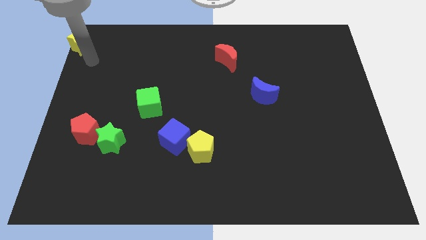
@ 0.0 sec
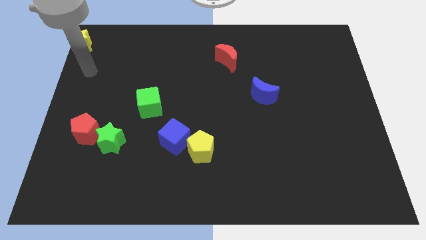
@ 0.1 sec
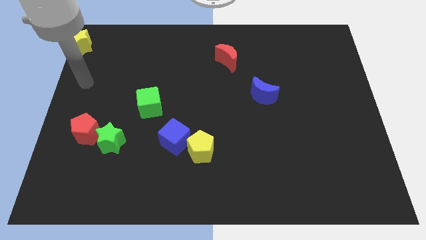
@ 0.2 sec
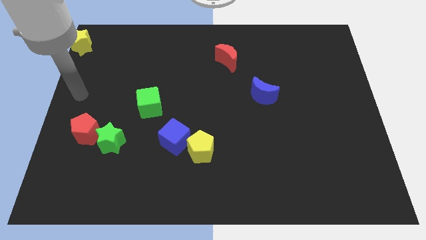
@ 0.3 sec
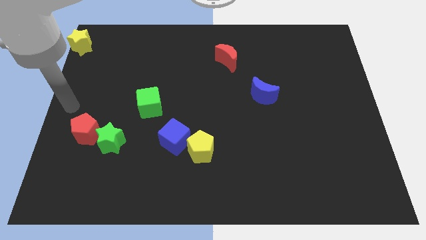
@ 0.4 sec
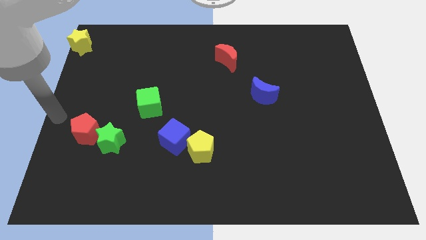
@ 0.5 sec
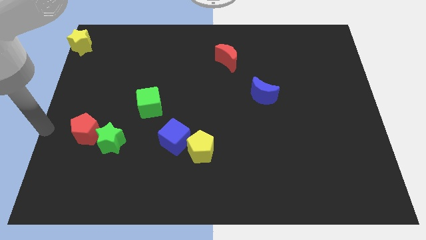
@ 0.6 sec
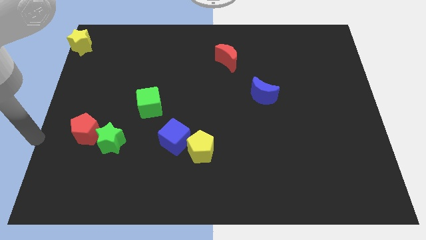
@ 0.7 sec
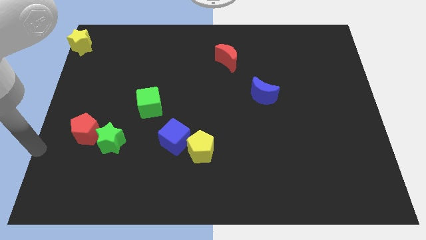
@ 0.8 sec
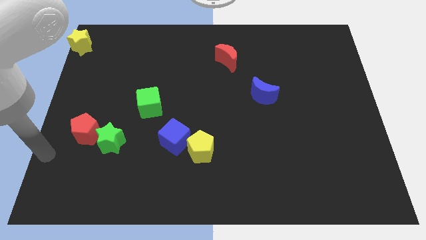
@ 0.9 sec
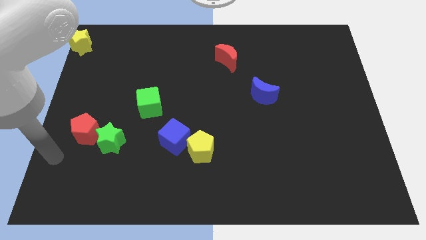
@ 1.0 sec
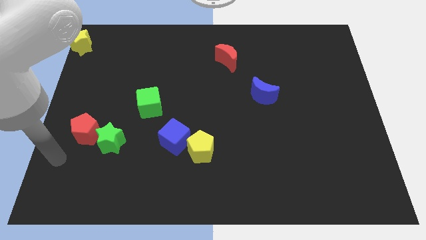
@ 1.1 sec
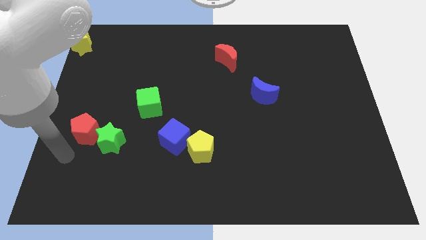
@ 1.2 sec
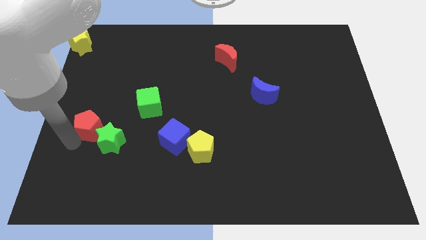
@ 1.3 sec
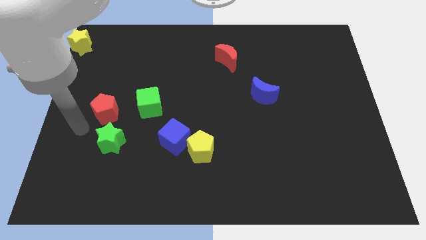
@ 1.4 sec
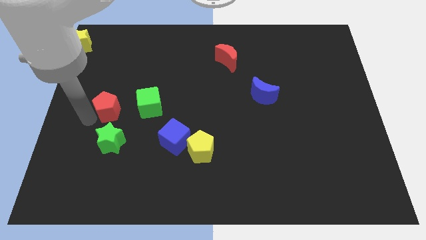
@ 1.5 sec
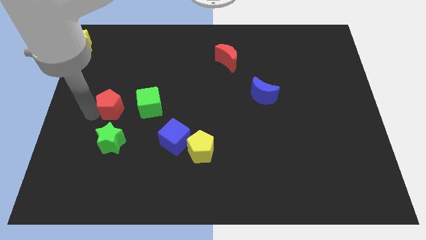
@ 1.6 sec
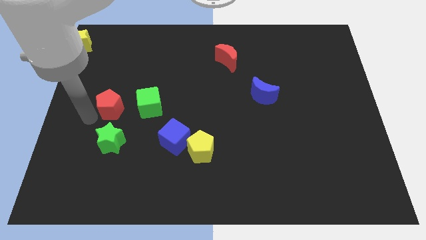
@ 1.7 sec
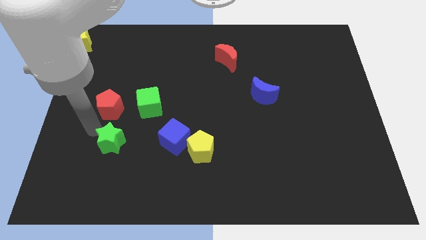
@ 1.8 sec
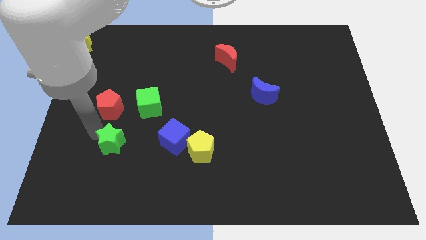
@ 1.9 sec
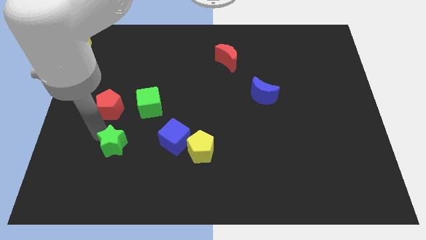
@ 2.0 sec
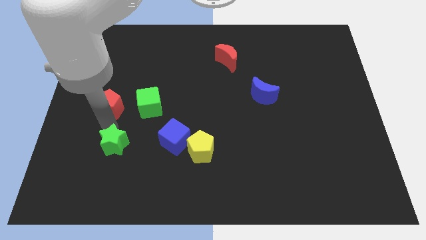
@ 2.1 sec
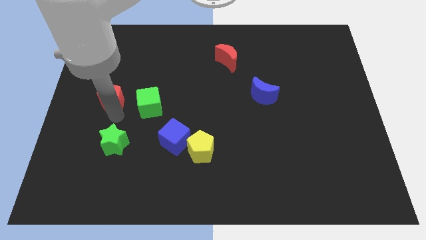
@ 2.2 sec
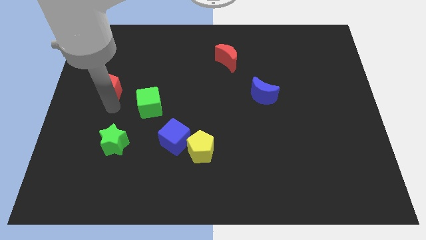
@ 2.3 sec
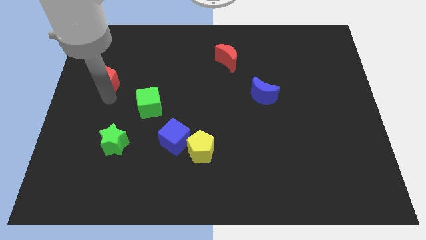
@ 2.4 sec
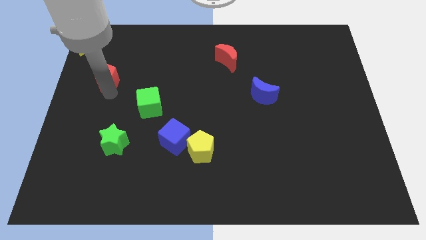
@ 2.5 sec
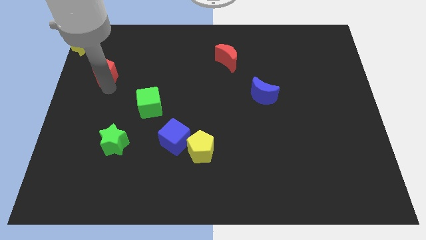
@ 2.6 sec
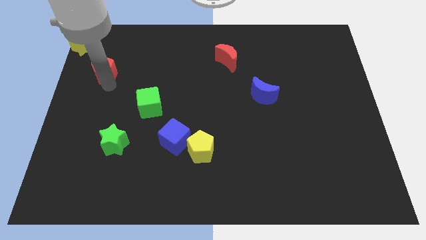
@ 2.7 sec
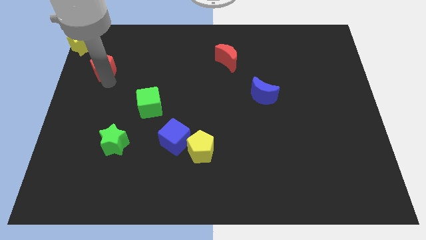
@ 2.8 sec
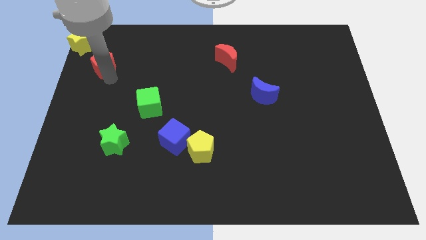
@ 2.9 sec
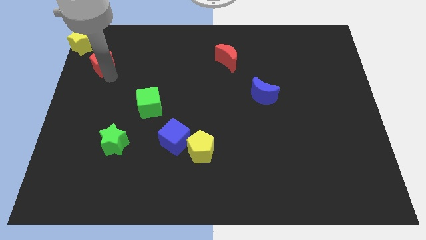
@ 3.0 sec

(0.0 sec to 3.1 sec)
separate red pentagon from the green star

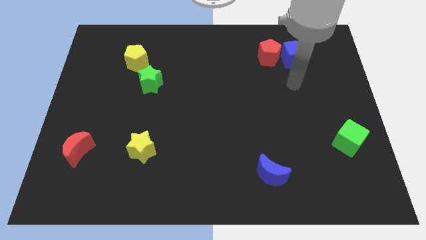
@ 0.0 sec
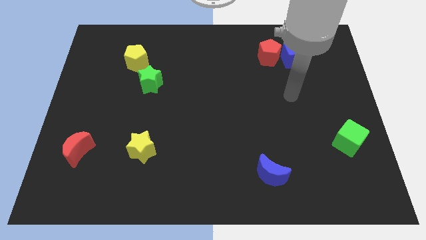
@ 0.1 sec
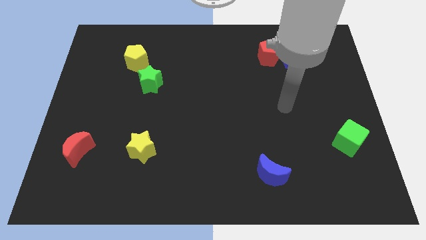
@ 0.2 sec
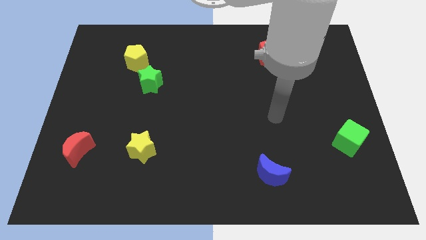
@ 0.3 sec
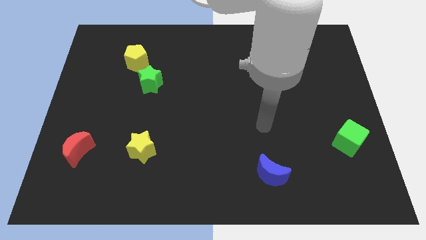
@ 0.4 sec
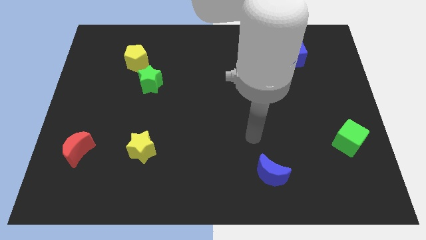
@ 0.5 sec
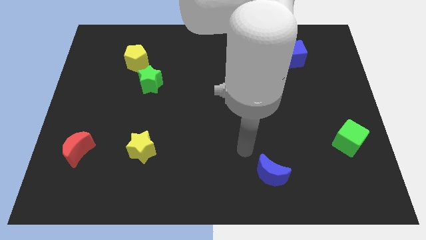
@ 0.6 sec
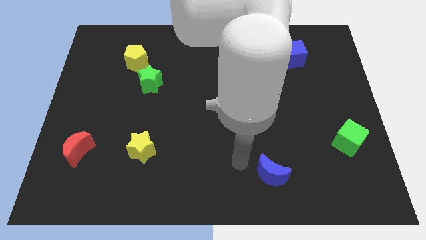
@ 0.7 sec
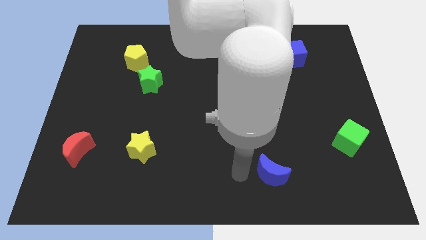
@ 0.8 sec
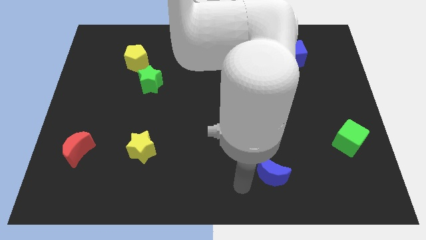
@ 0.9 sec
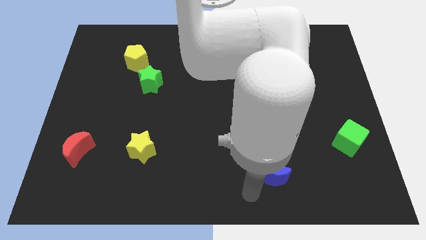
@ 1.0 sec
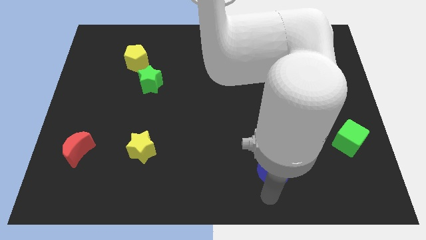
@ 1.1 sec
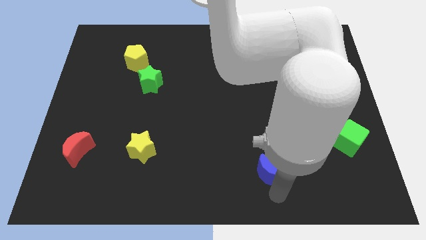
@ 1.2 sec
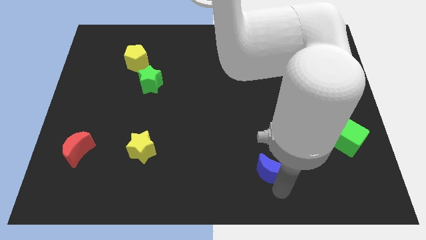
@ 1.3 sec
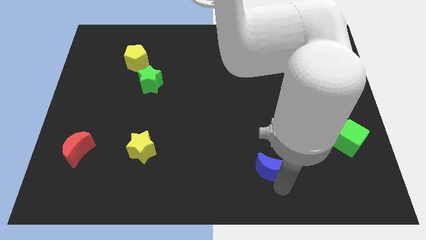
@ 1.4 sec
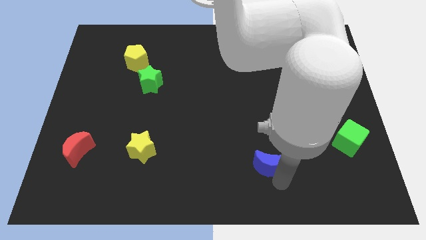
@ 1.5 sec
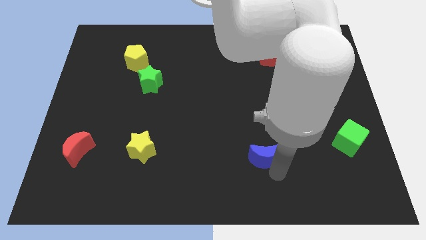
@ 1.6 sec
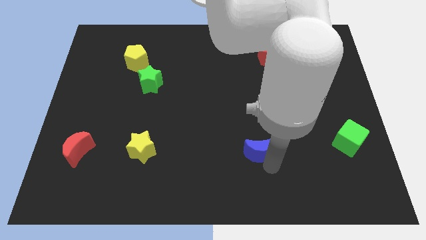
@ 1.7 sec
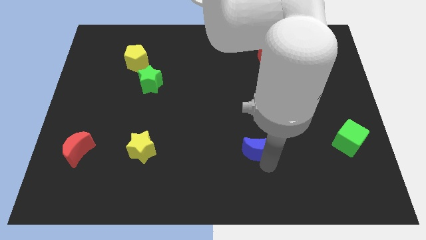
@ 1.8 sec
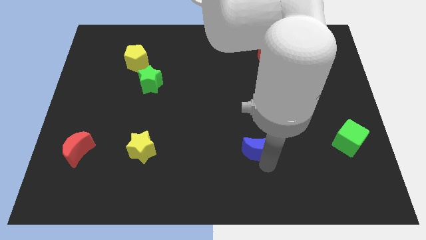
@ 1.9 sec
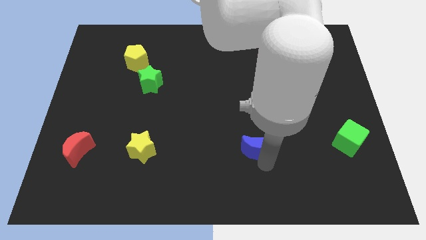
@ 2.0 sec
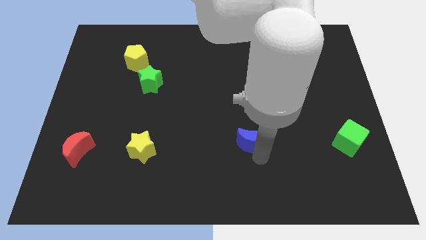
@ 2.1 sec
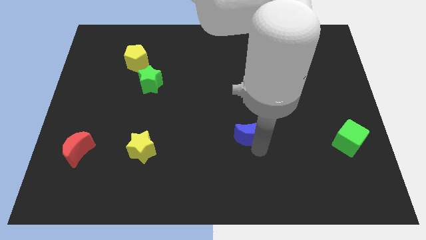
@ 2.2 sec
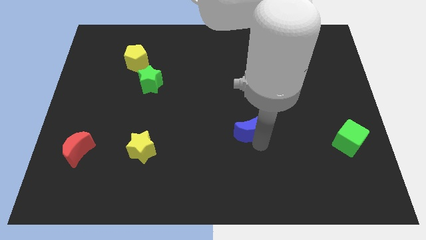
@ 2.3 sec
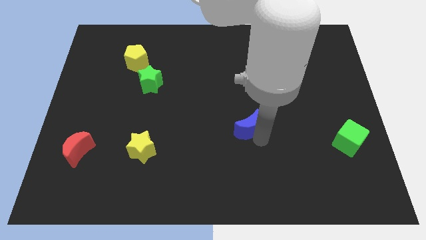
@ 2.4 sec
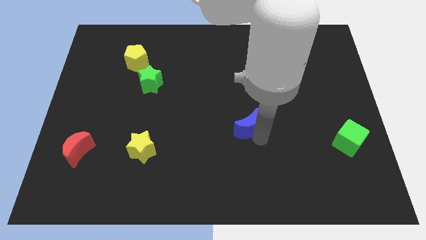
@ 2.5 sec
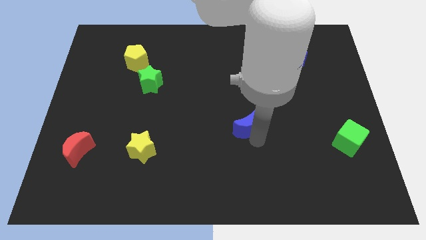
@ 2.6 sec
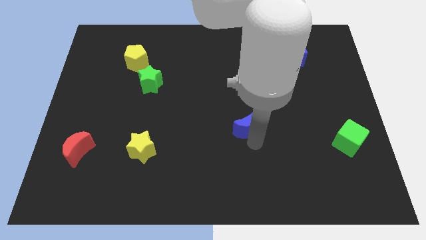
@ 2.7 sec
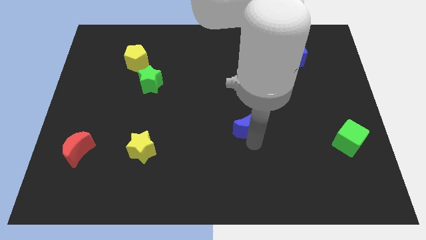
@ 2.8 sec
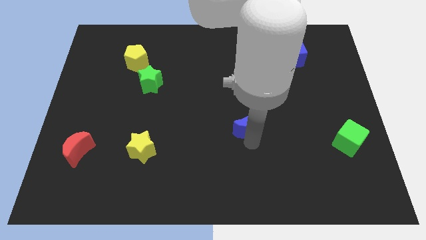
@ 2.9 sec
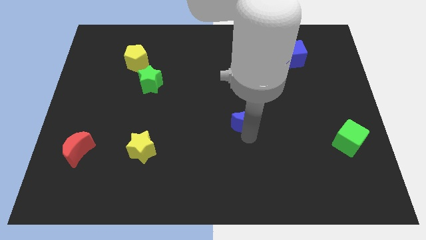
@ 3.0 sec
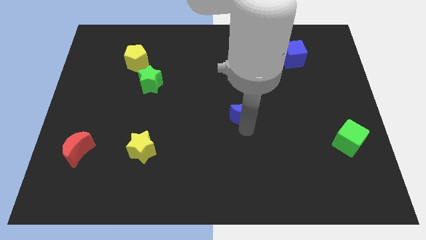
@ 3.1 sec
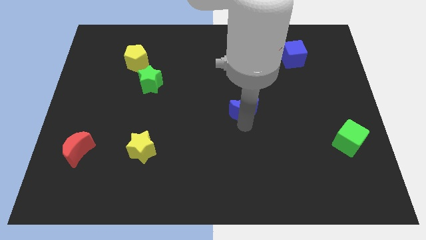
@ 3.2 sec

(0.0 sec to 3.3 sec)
slide the blue moon towards up

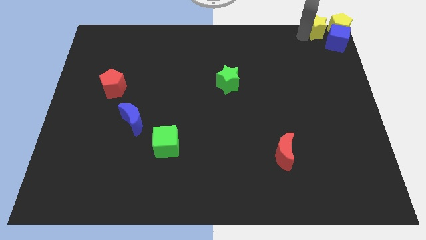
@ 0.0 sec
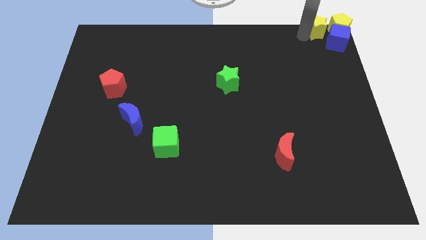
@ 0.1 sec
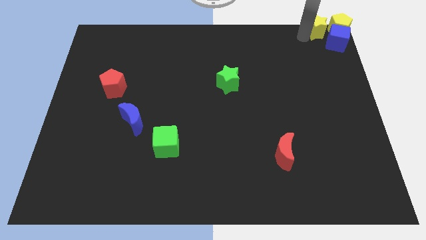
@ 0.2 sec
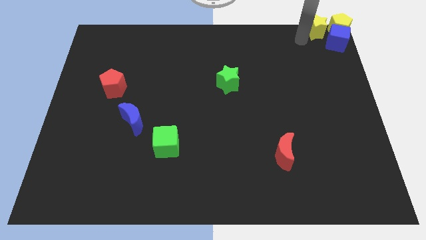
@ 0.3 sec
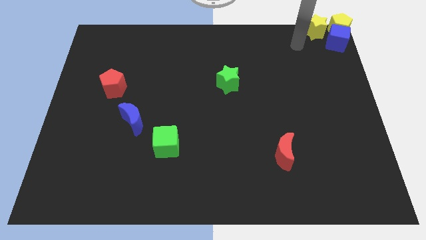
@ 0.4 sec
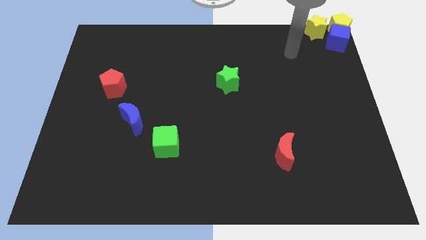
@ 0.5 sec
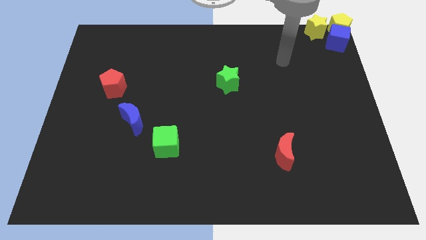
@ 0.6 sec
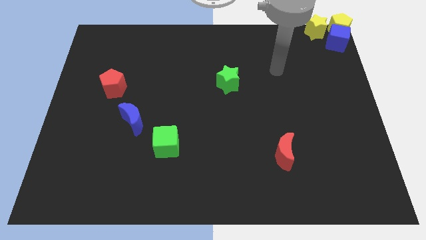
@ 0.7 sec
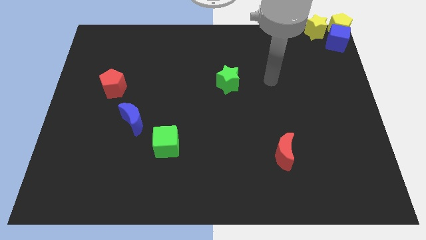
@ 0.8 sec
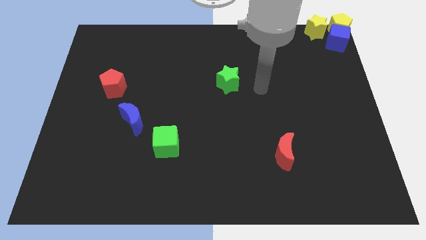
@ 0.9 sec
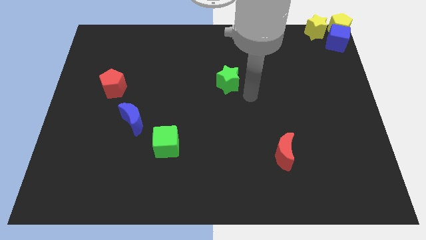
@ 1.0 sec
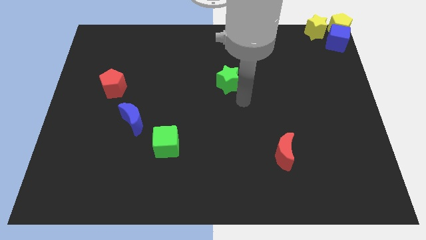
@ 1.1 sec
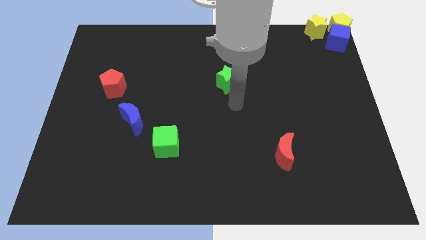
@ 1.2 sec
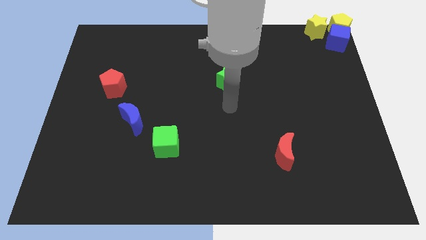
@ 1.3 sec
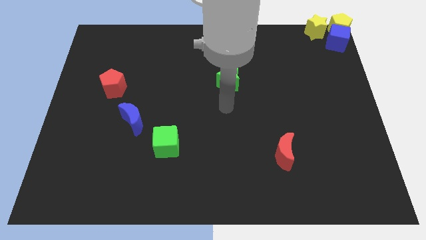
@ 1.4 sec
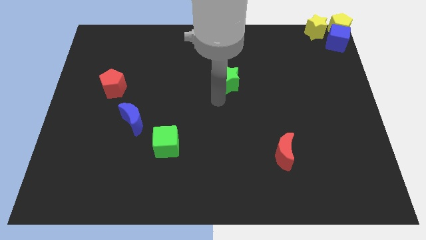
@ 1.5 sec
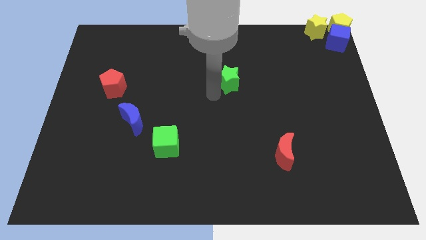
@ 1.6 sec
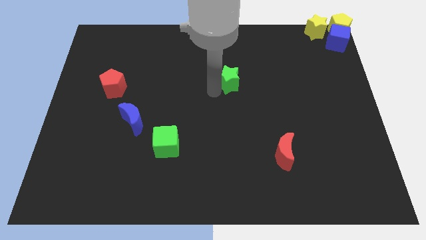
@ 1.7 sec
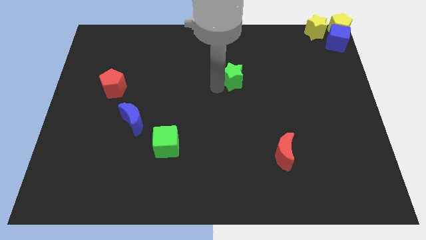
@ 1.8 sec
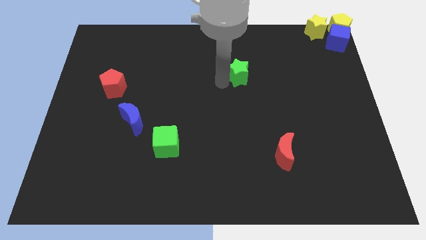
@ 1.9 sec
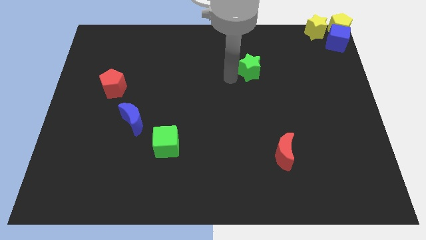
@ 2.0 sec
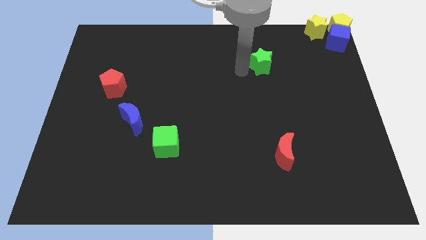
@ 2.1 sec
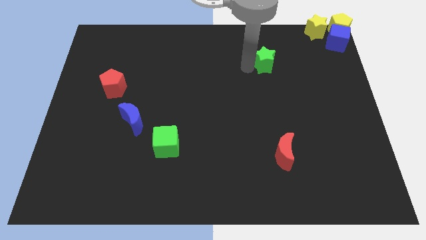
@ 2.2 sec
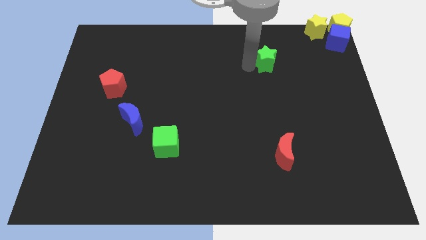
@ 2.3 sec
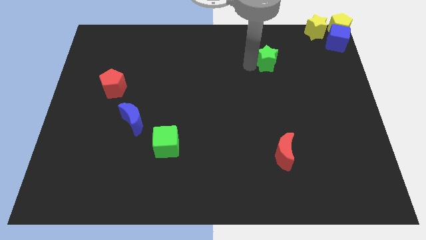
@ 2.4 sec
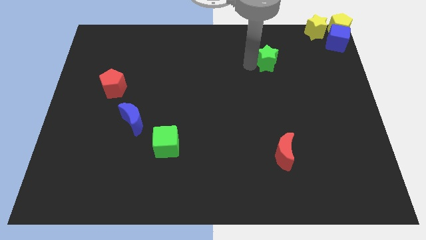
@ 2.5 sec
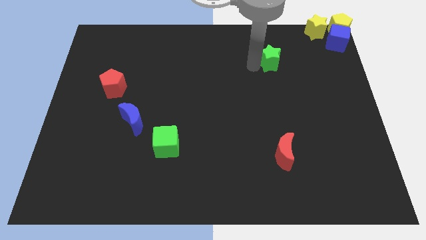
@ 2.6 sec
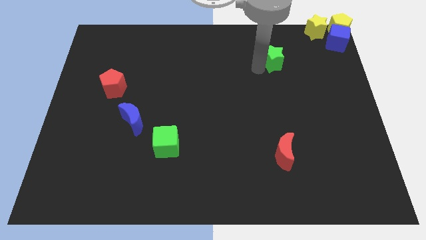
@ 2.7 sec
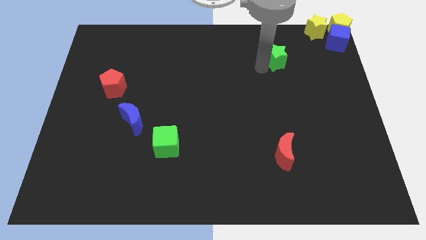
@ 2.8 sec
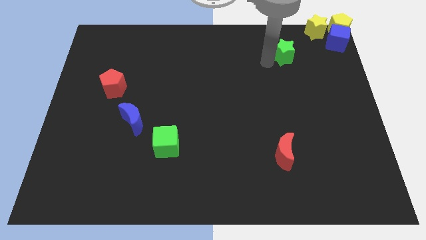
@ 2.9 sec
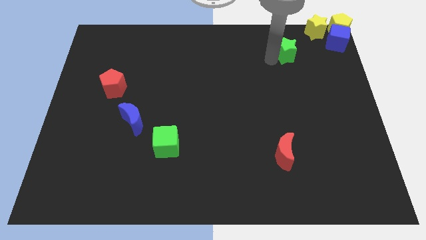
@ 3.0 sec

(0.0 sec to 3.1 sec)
place the green star diagonally bottom left to the yellow star
